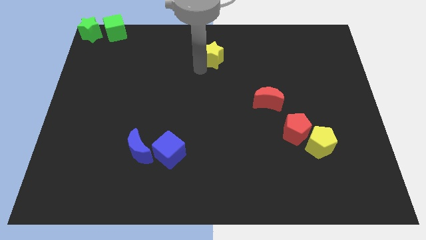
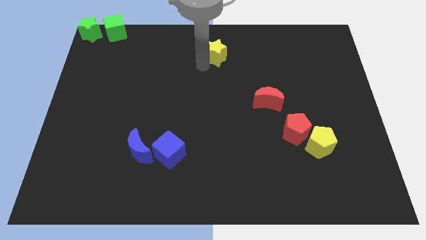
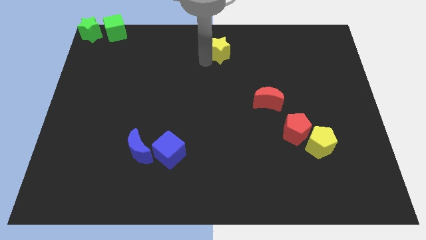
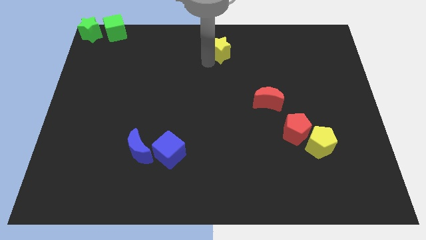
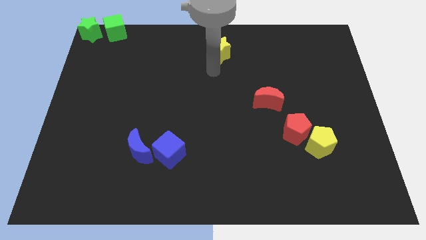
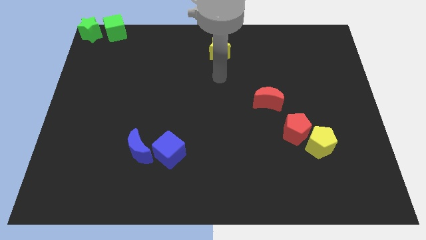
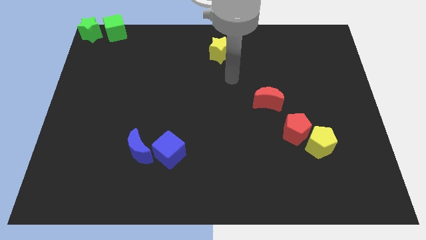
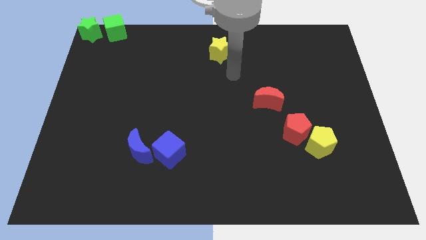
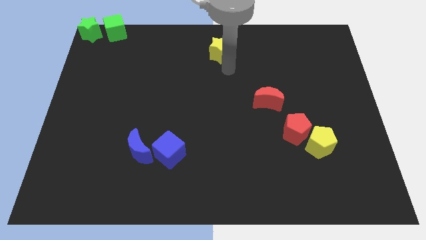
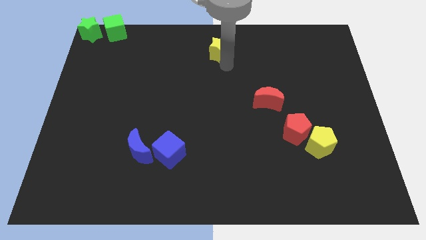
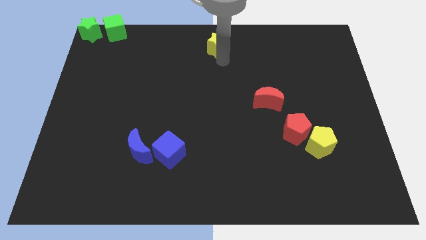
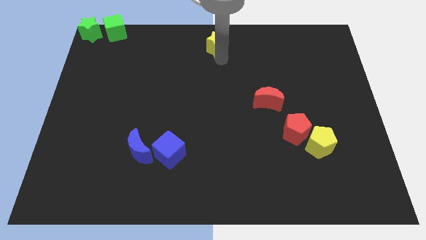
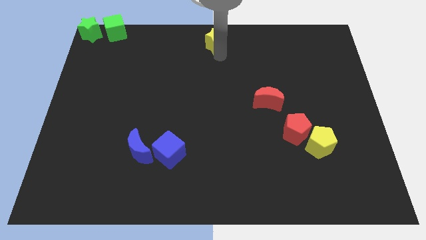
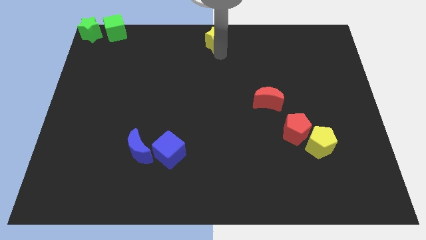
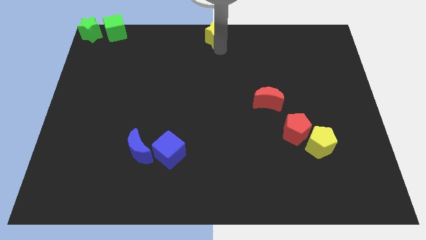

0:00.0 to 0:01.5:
push yellow star to the top center of the board

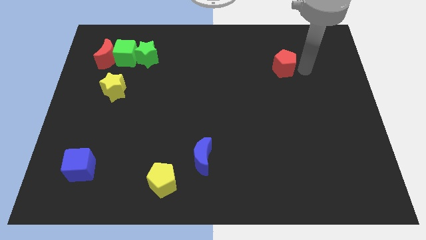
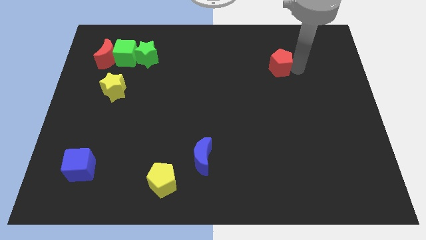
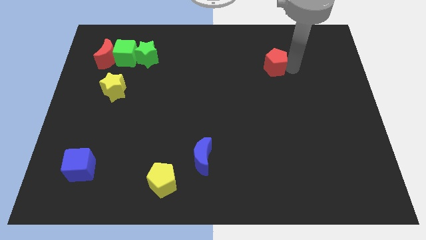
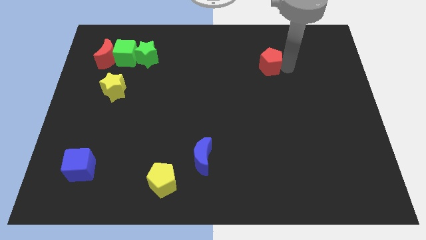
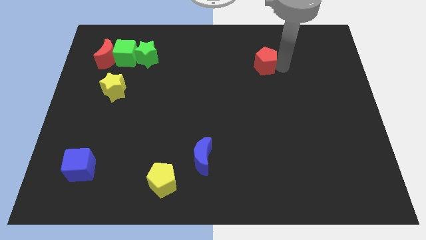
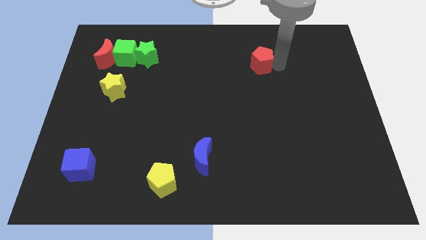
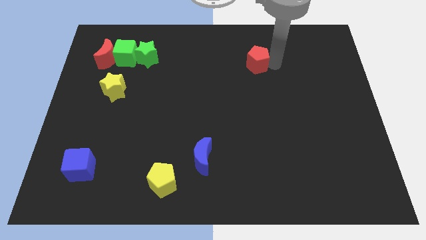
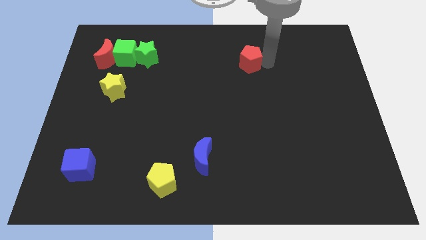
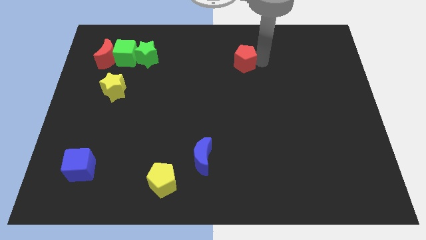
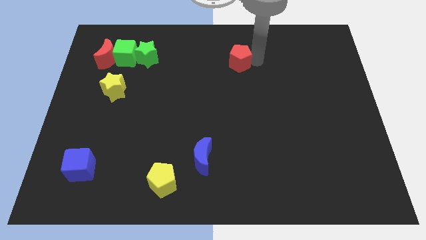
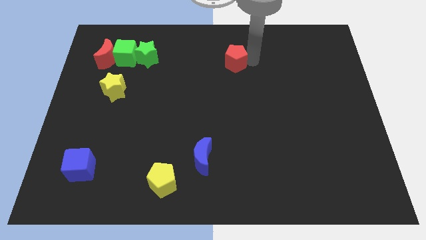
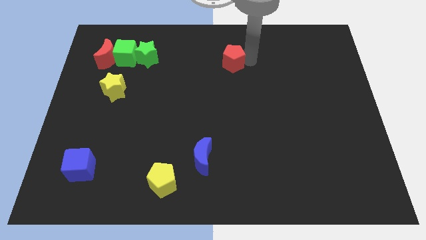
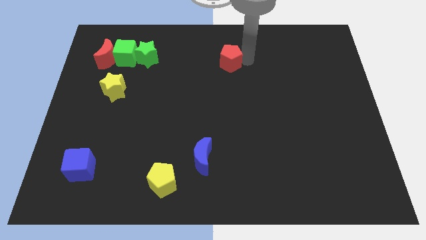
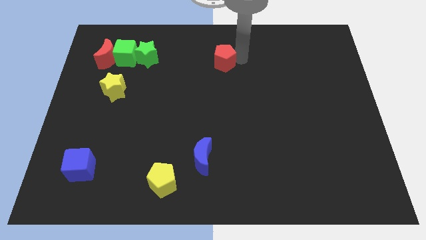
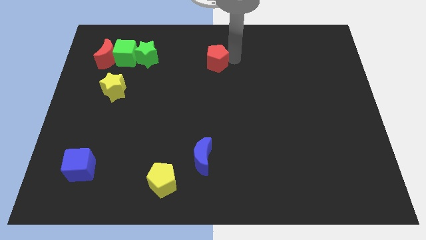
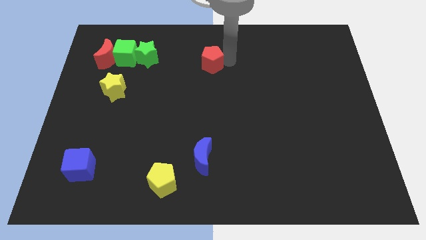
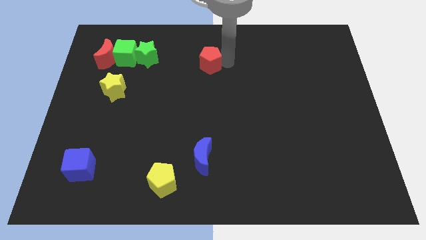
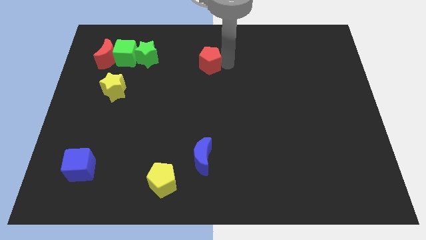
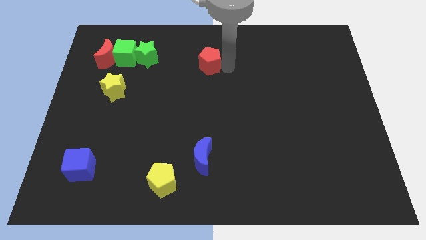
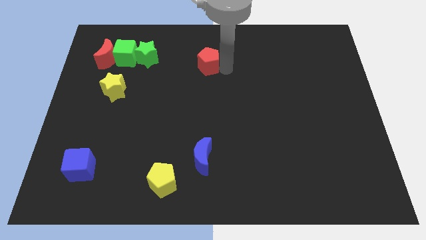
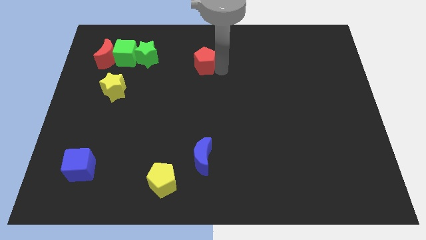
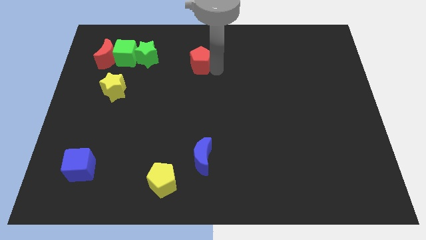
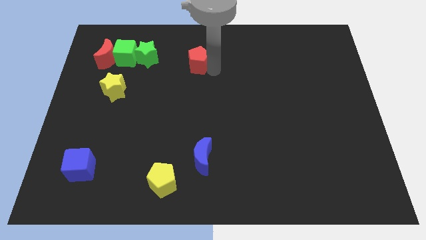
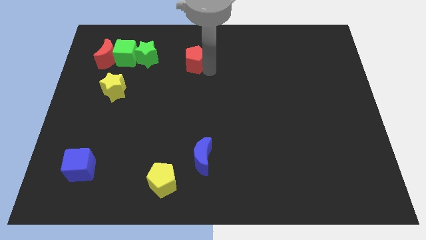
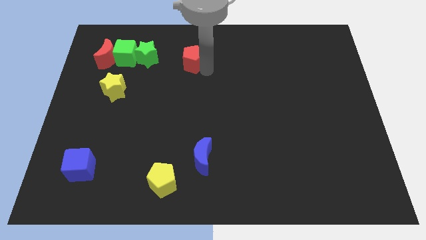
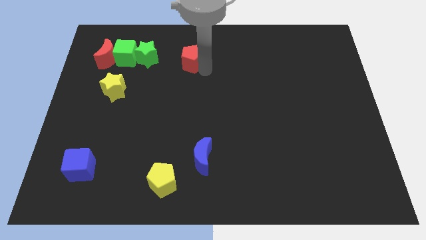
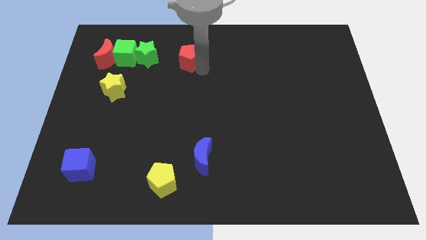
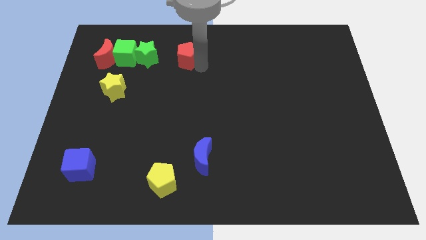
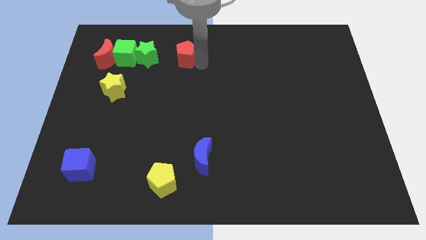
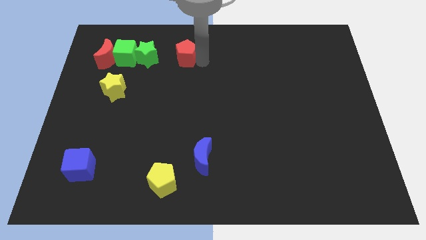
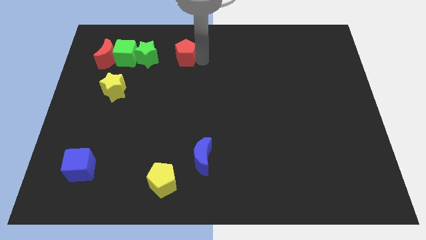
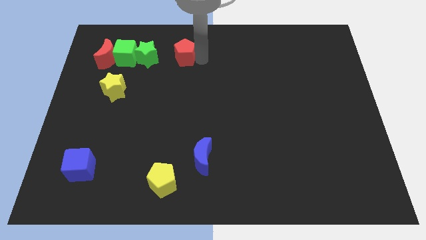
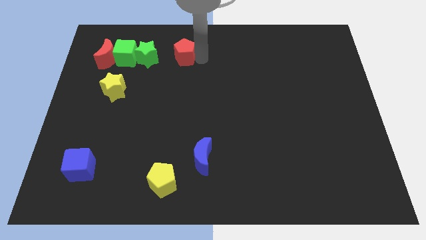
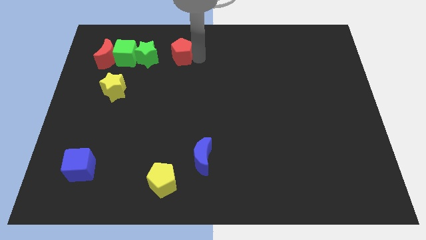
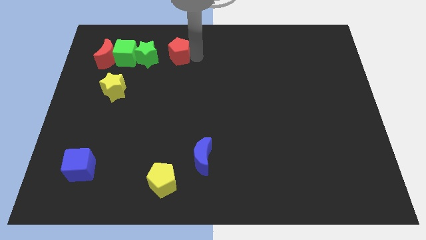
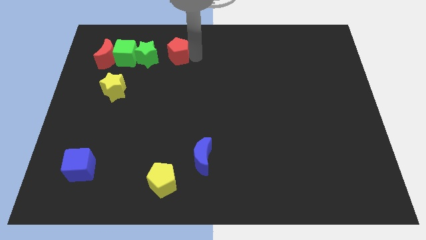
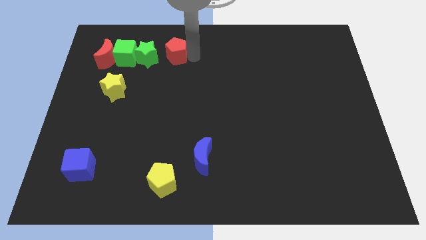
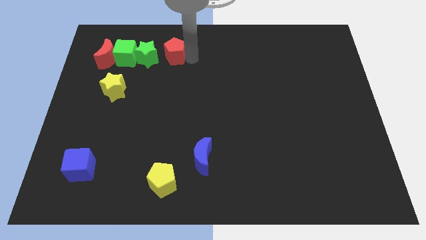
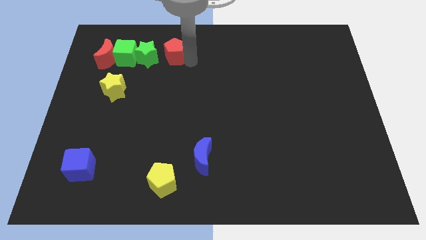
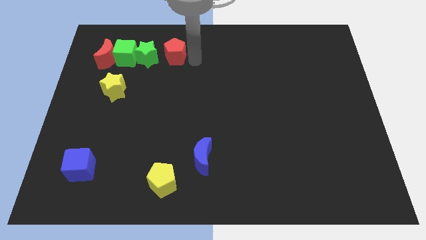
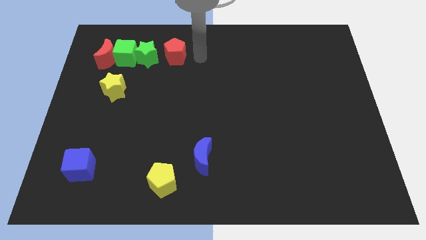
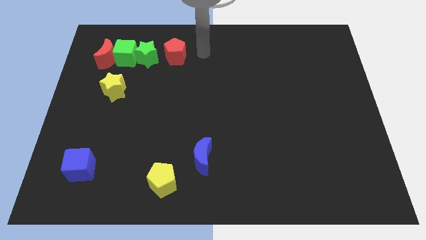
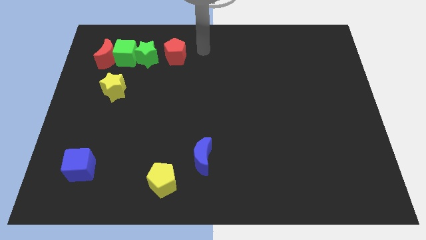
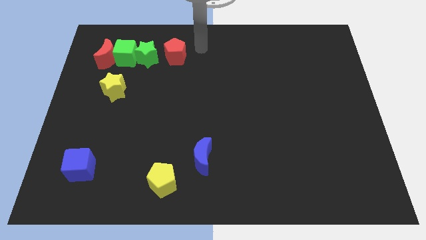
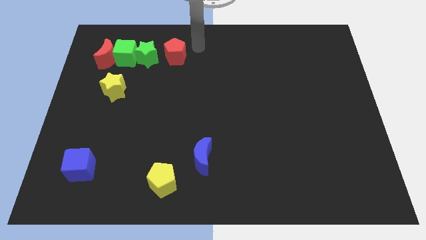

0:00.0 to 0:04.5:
move the red penatgon to the right side of the green star

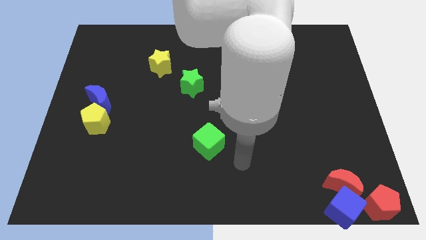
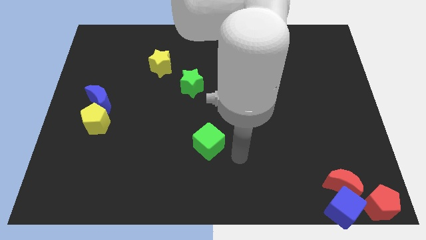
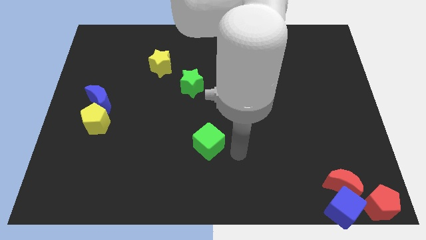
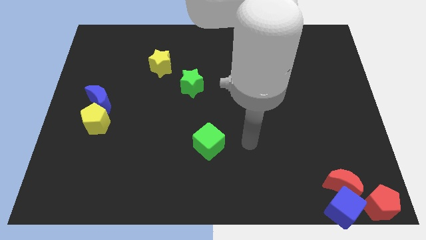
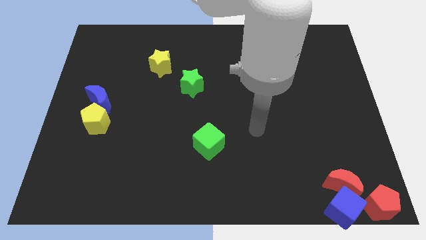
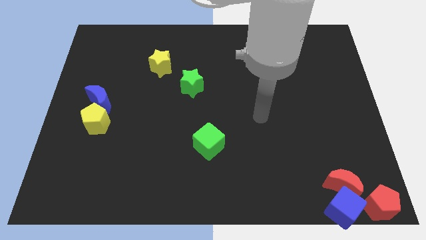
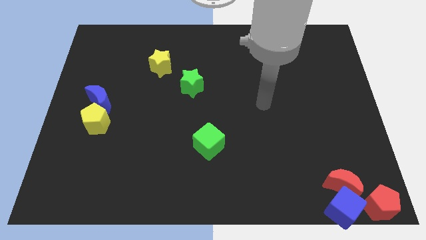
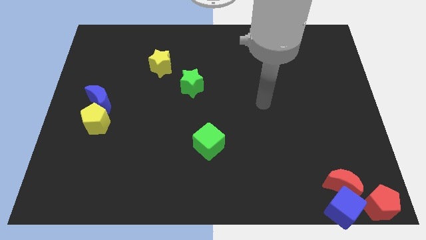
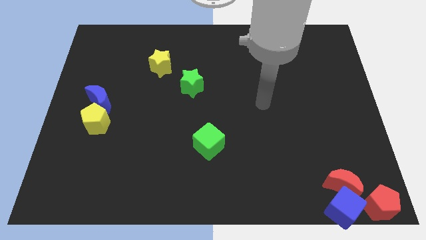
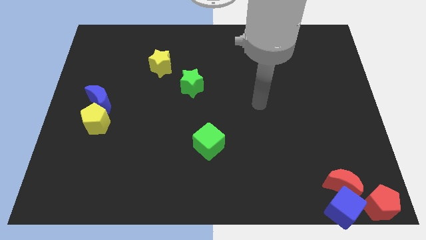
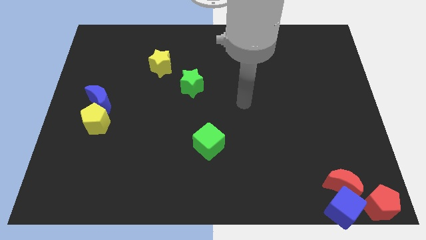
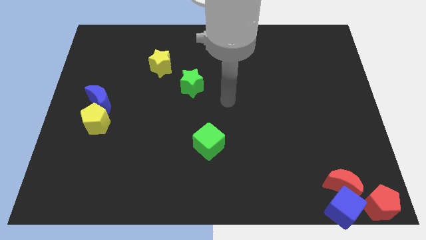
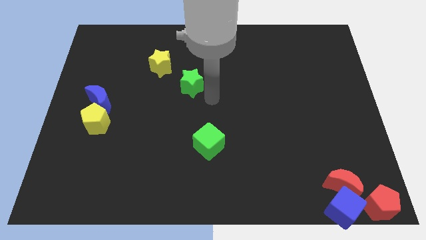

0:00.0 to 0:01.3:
move your arm towards the green star

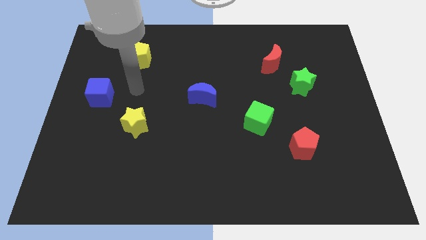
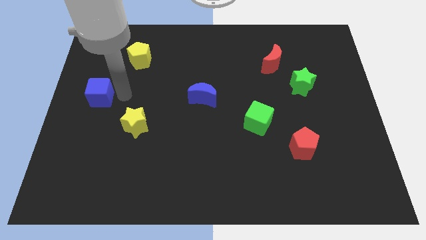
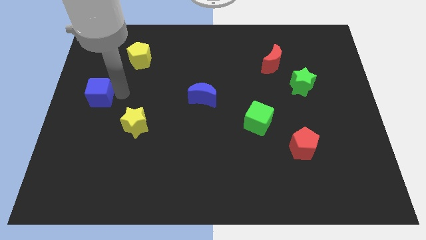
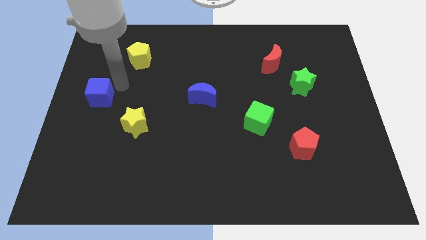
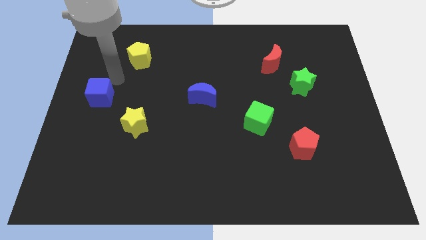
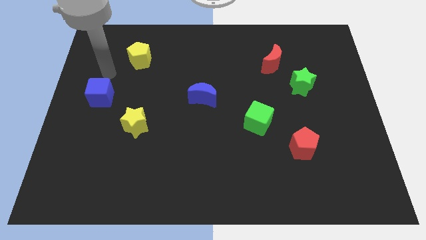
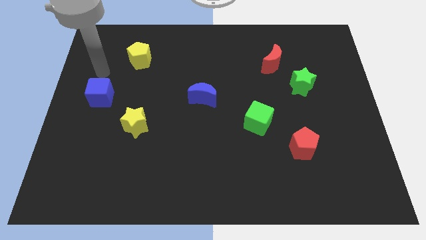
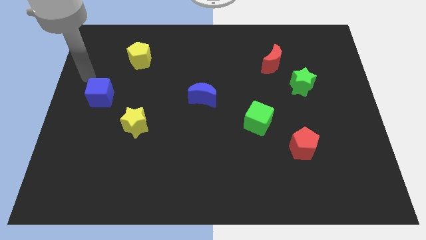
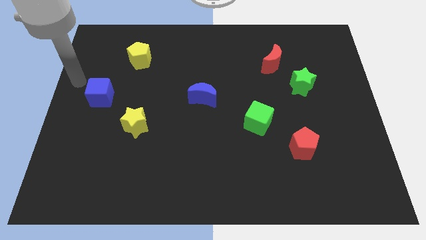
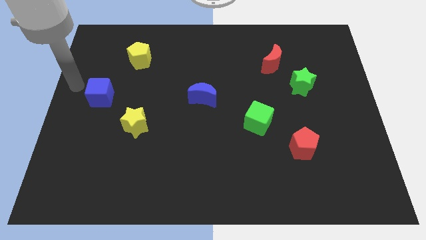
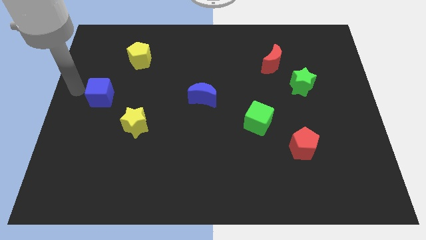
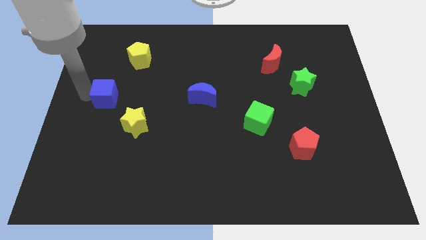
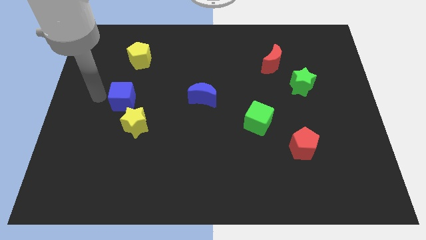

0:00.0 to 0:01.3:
touch on the left side of the blue cube

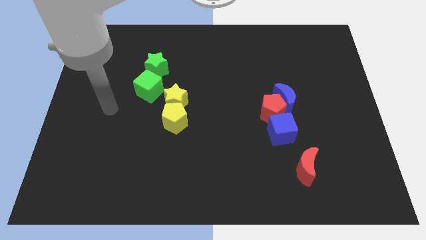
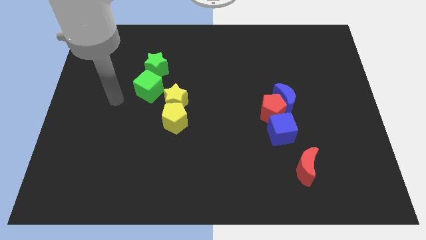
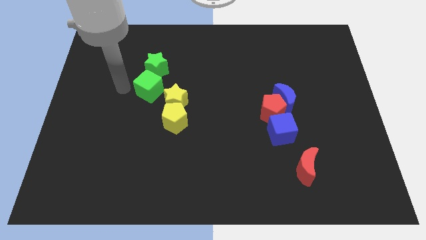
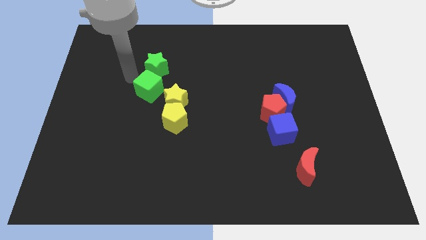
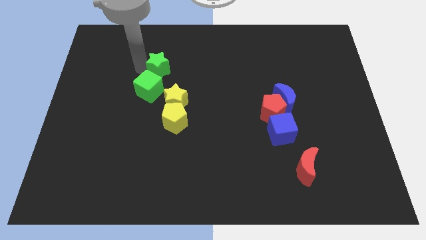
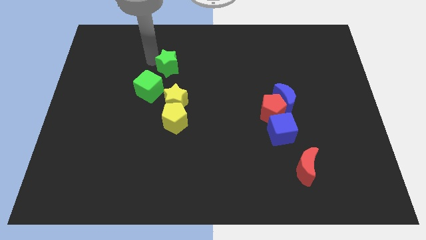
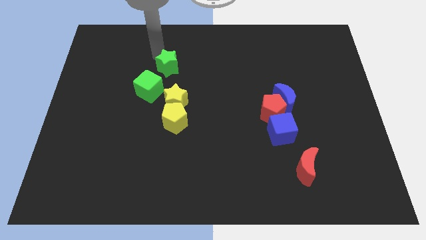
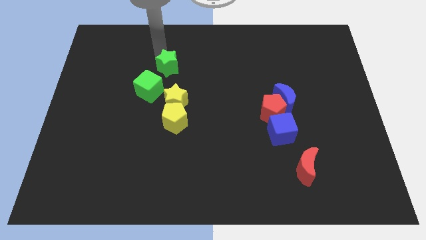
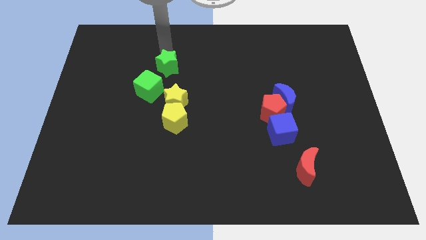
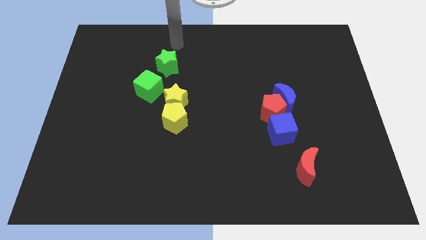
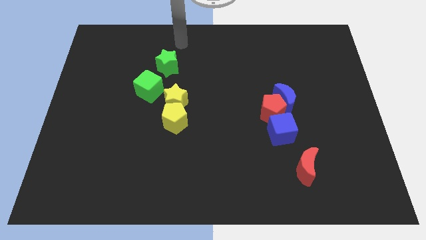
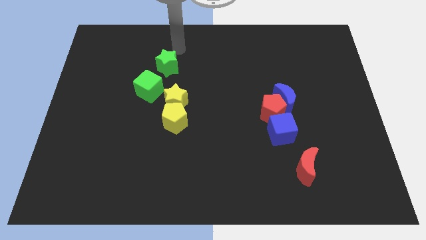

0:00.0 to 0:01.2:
push the green star slightly to the right side of the board
